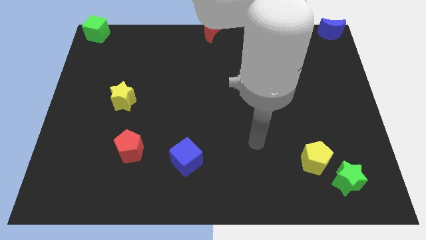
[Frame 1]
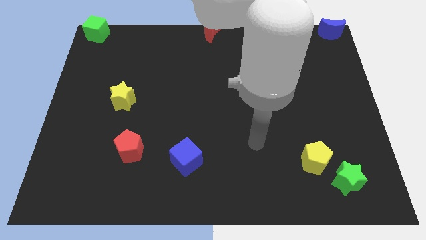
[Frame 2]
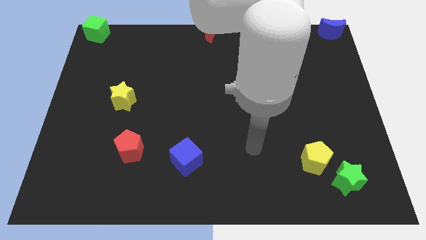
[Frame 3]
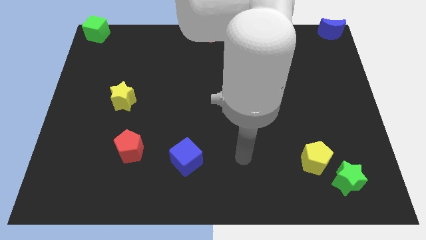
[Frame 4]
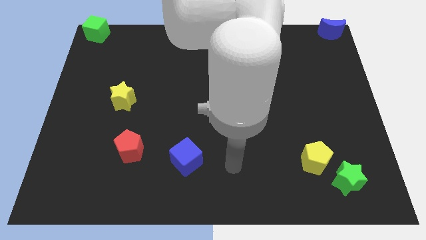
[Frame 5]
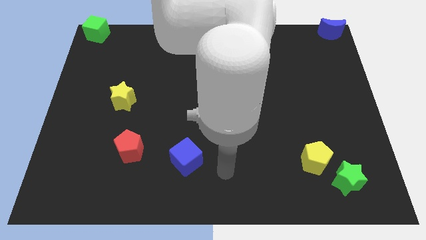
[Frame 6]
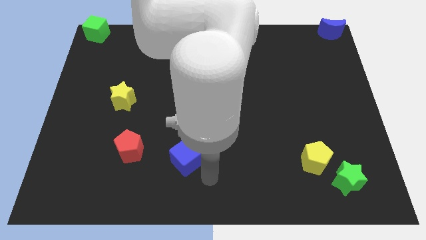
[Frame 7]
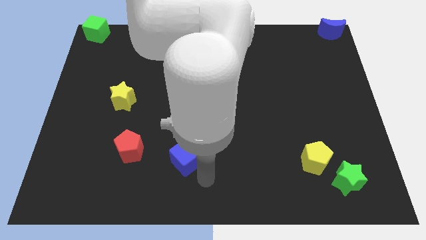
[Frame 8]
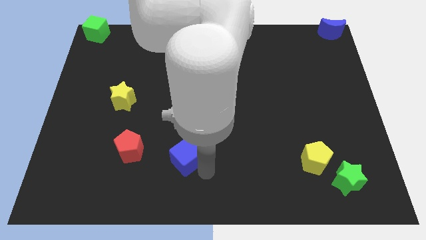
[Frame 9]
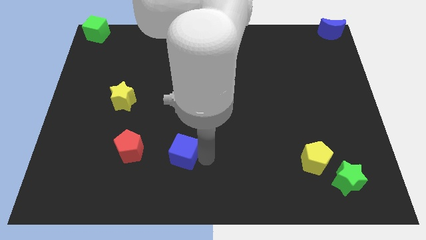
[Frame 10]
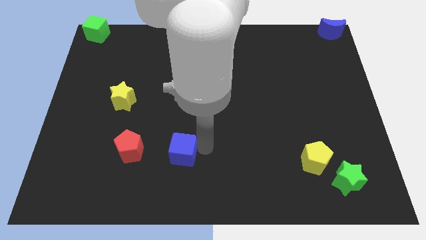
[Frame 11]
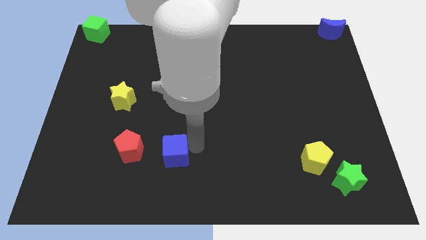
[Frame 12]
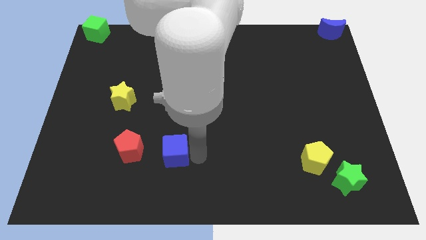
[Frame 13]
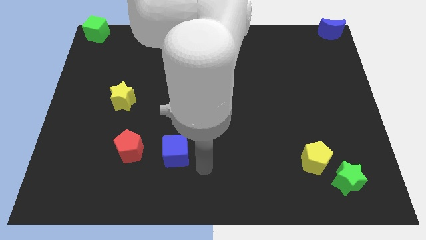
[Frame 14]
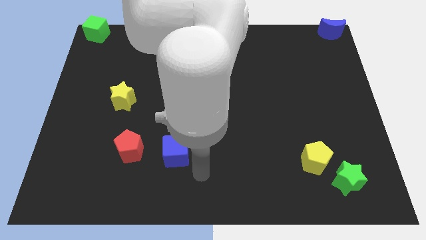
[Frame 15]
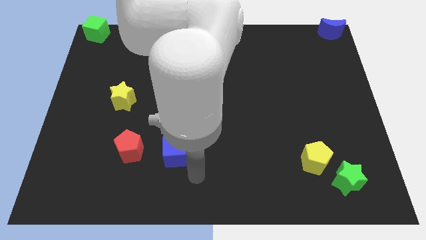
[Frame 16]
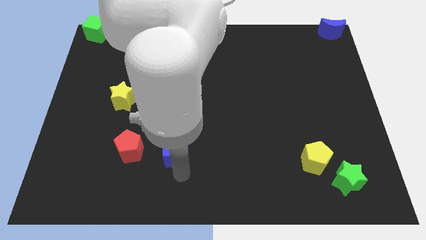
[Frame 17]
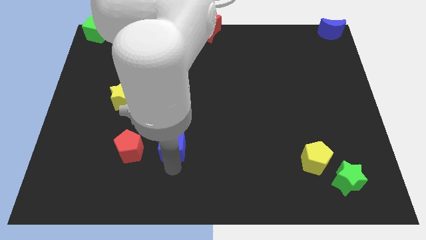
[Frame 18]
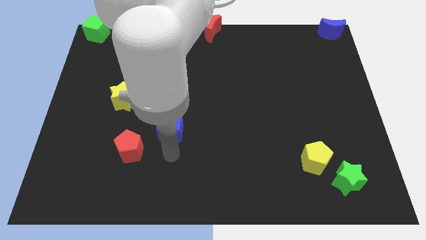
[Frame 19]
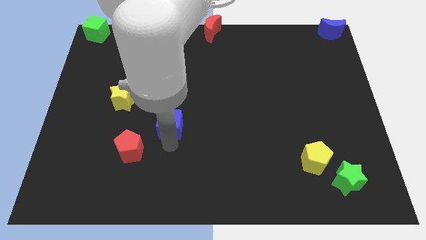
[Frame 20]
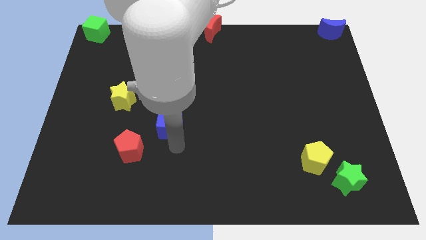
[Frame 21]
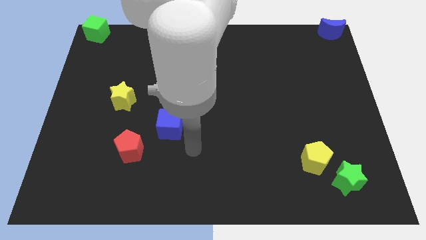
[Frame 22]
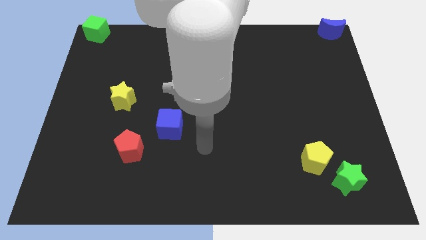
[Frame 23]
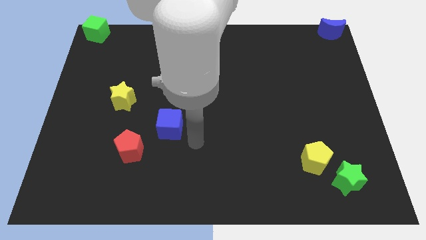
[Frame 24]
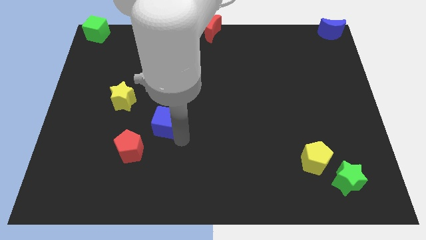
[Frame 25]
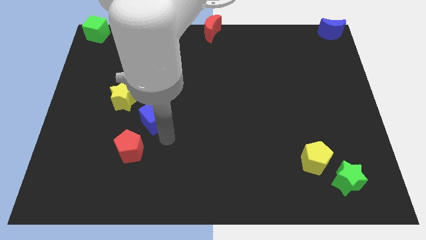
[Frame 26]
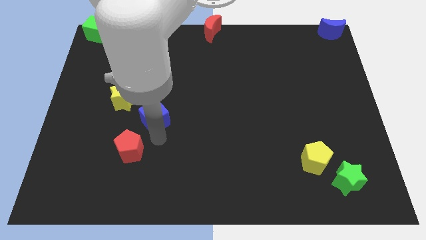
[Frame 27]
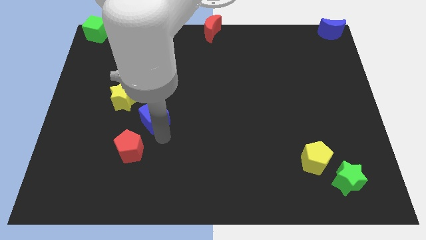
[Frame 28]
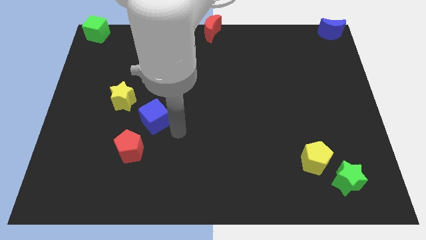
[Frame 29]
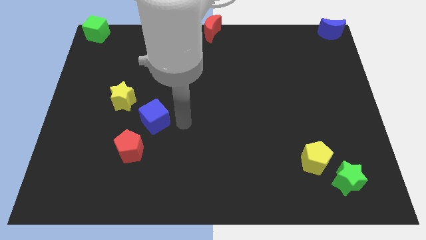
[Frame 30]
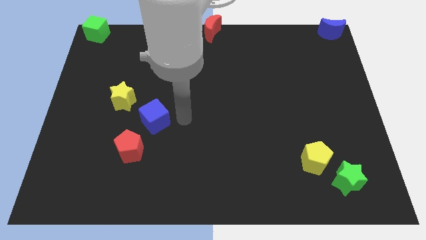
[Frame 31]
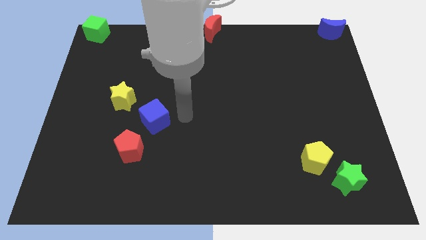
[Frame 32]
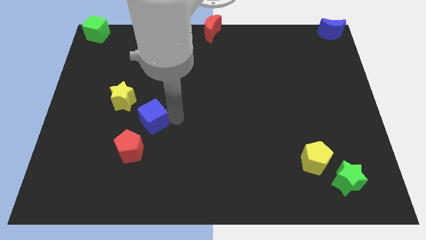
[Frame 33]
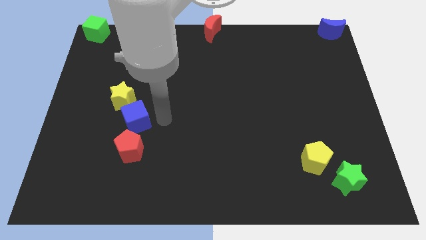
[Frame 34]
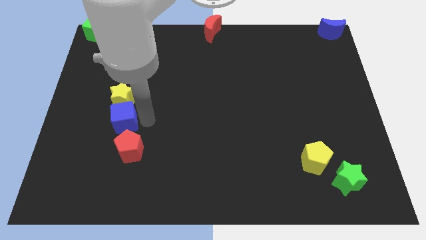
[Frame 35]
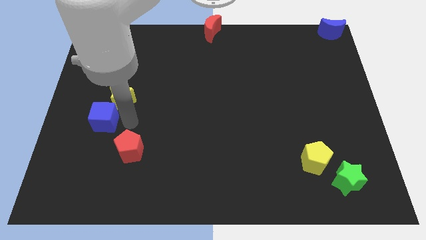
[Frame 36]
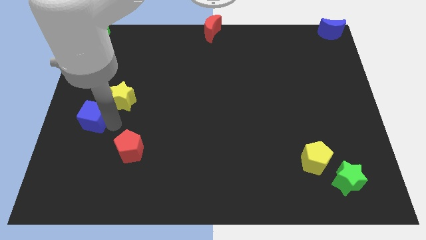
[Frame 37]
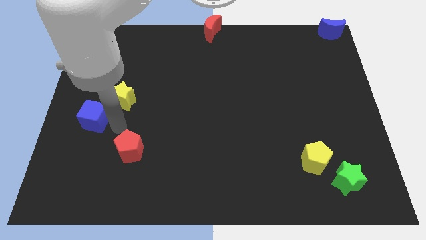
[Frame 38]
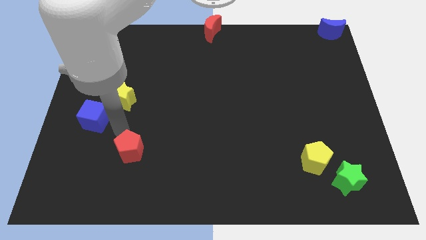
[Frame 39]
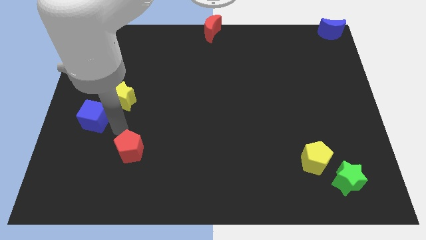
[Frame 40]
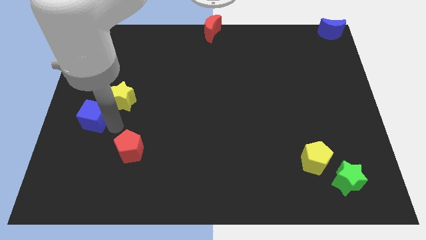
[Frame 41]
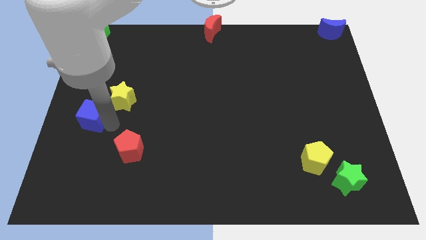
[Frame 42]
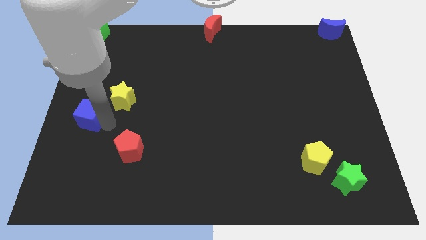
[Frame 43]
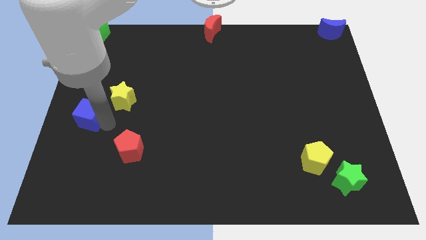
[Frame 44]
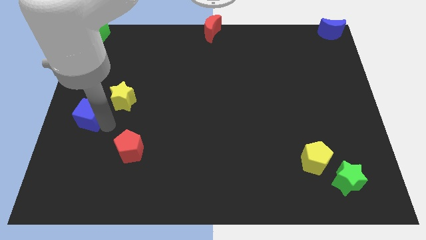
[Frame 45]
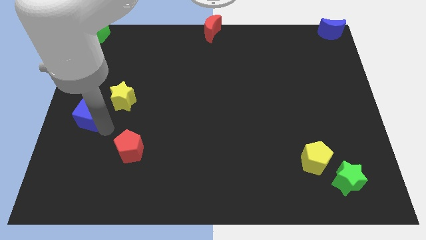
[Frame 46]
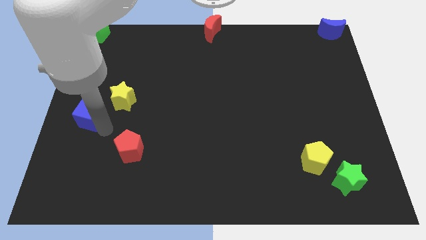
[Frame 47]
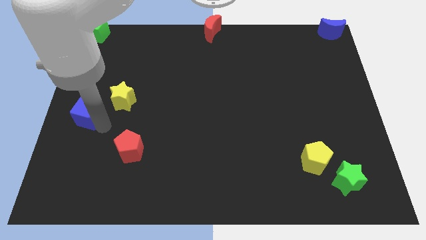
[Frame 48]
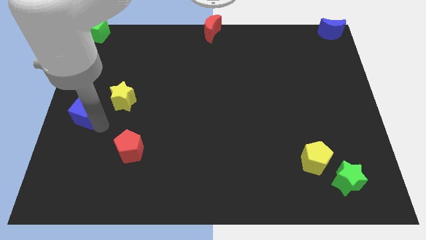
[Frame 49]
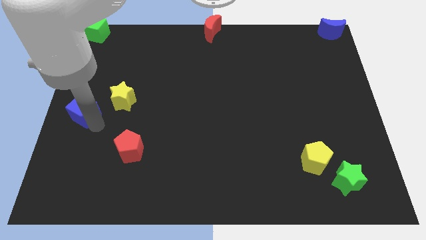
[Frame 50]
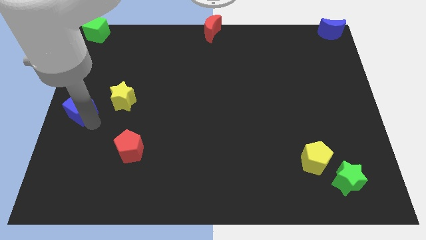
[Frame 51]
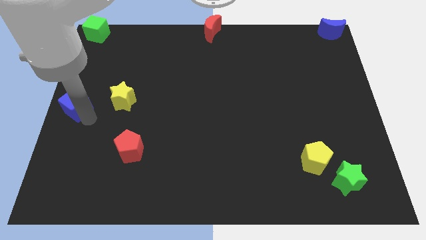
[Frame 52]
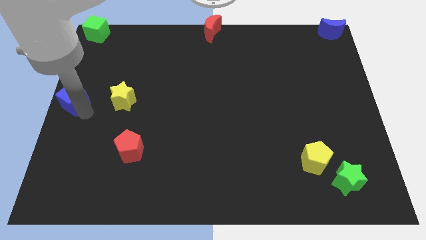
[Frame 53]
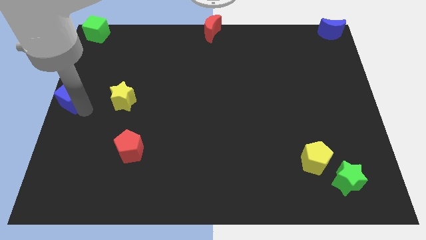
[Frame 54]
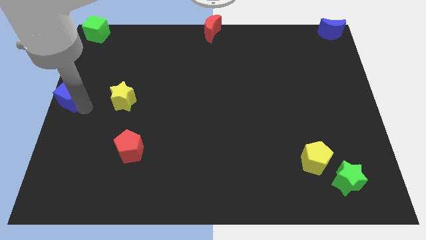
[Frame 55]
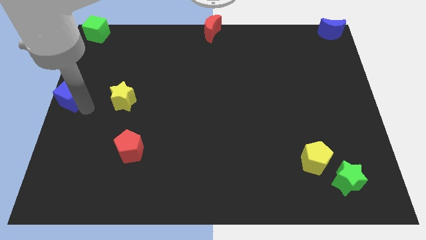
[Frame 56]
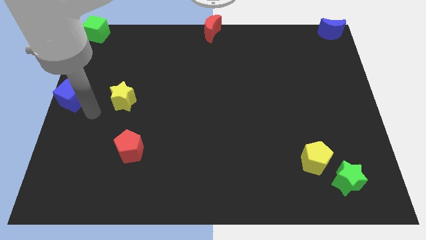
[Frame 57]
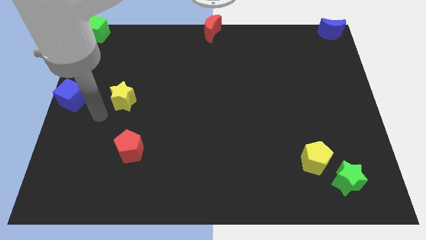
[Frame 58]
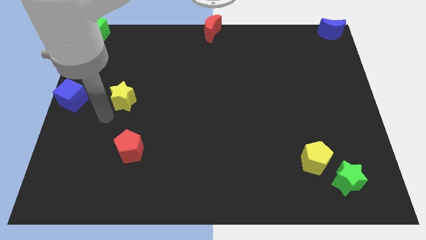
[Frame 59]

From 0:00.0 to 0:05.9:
move the blue cube to the left center of board

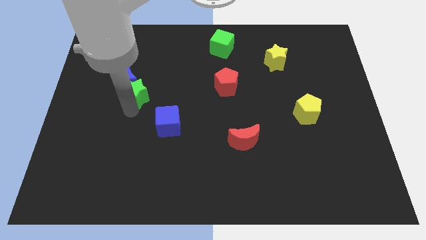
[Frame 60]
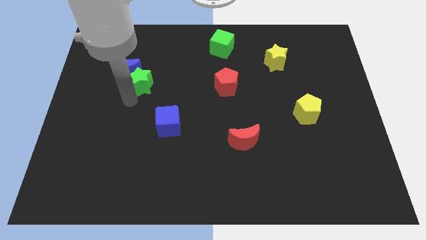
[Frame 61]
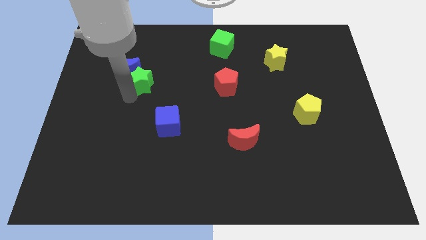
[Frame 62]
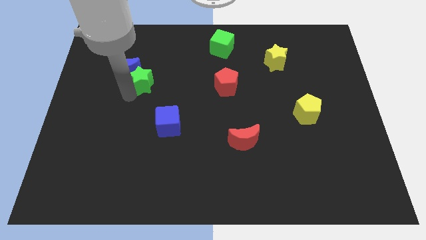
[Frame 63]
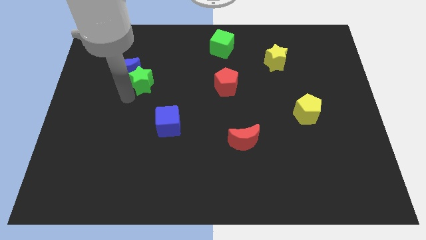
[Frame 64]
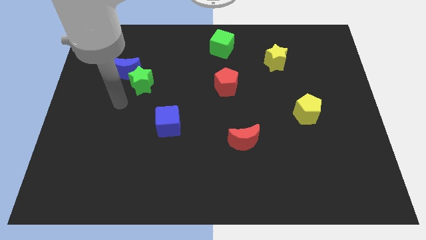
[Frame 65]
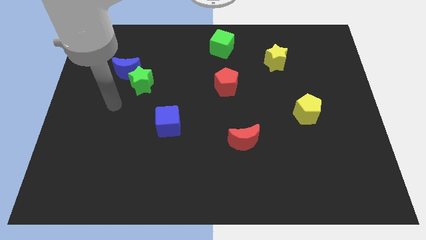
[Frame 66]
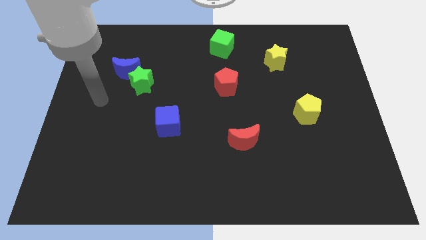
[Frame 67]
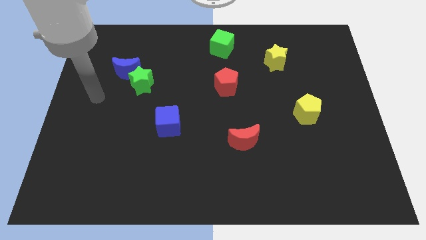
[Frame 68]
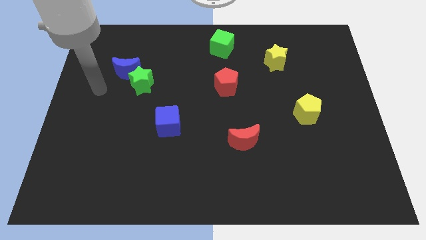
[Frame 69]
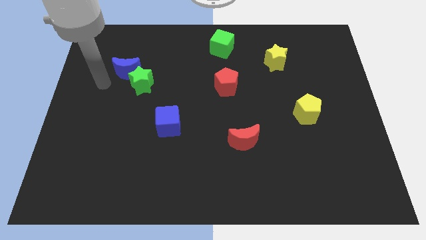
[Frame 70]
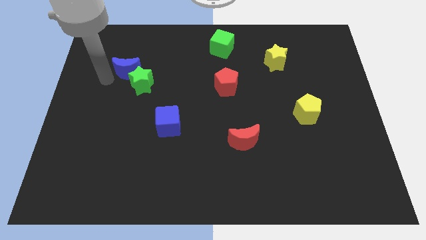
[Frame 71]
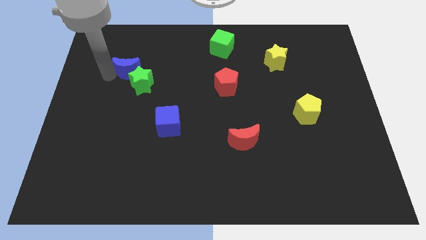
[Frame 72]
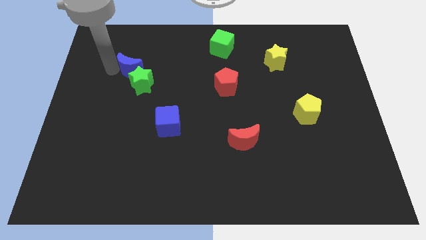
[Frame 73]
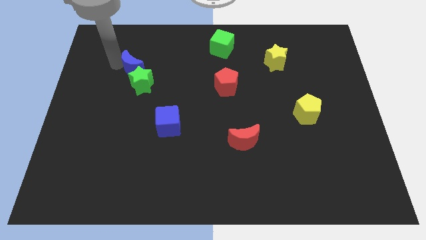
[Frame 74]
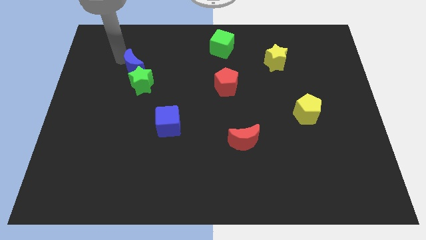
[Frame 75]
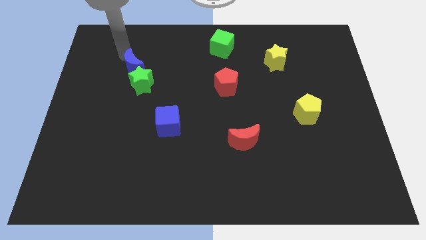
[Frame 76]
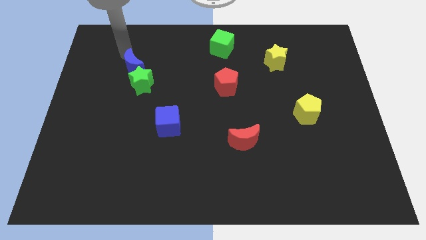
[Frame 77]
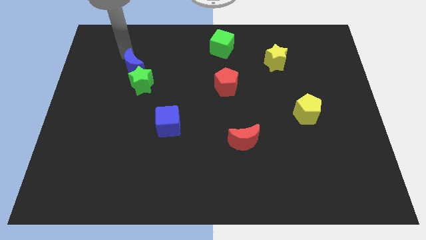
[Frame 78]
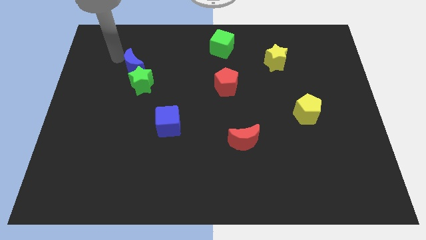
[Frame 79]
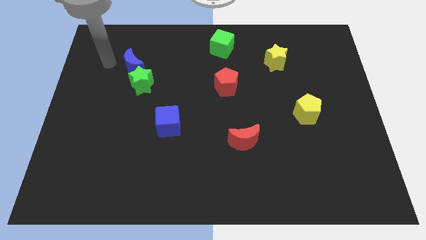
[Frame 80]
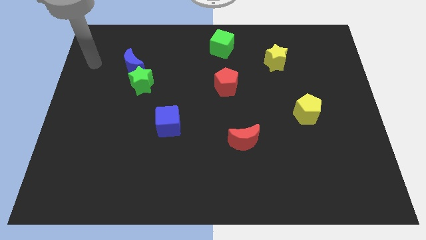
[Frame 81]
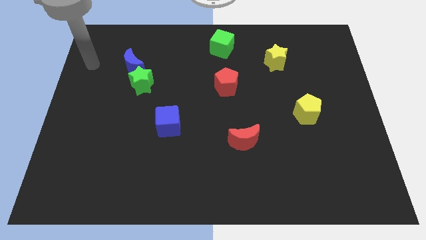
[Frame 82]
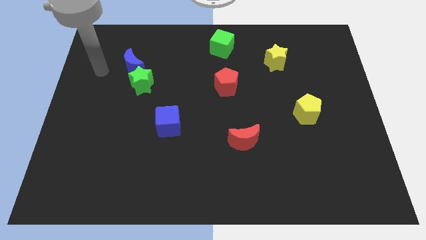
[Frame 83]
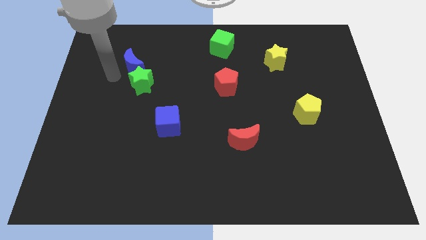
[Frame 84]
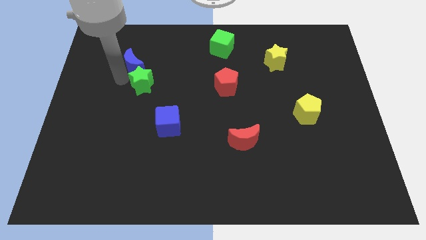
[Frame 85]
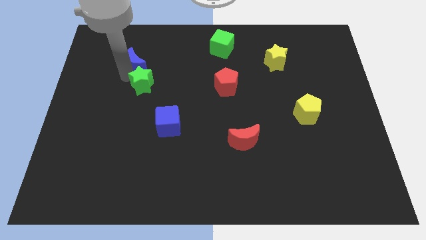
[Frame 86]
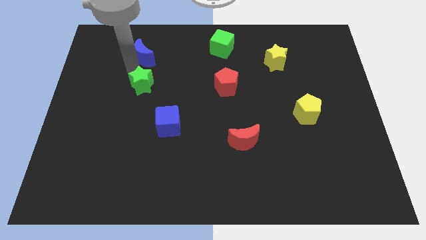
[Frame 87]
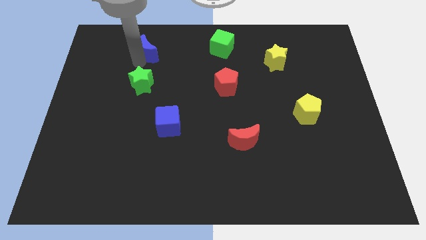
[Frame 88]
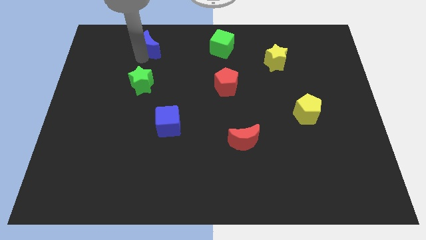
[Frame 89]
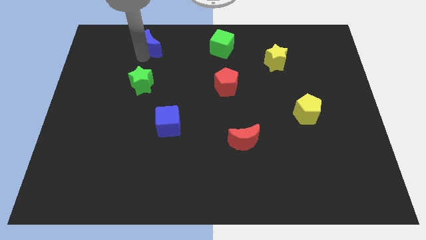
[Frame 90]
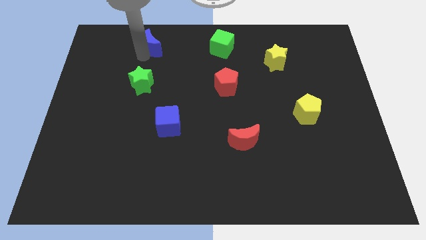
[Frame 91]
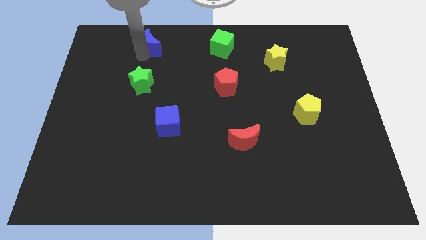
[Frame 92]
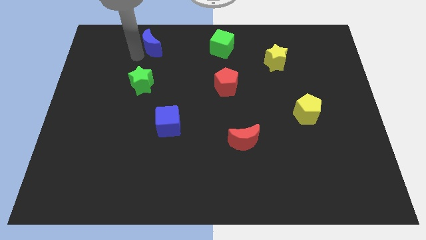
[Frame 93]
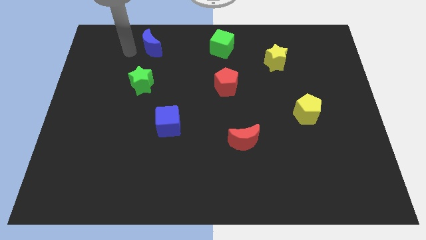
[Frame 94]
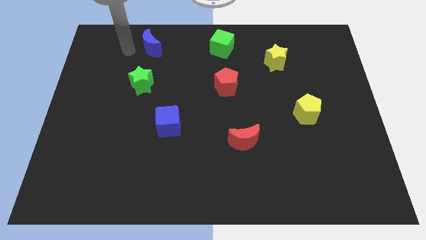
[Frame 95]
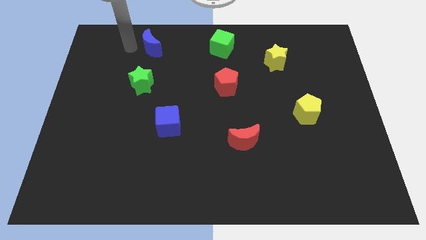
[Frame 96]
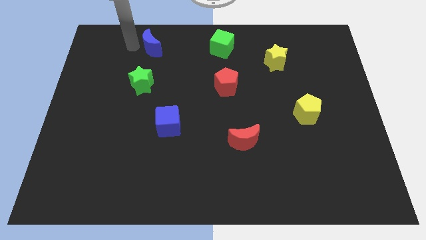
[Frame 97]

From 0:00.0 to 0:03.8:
separate the green star and blue moon
